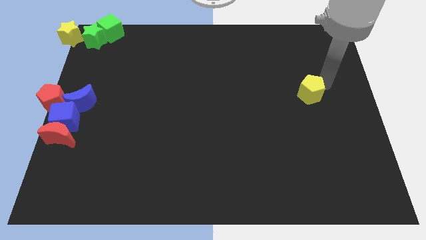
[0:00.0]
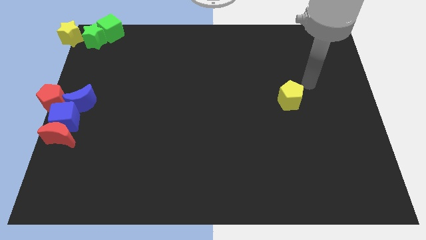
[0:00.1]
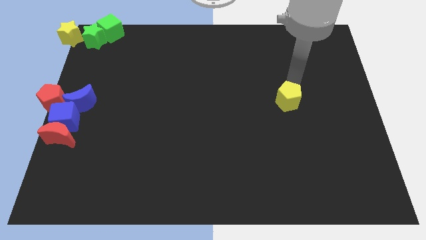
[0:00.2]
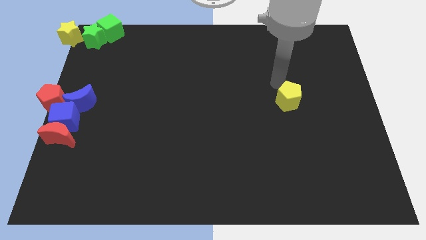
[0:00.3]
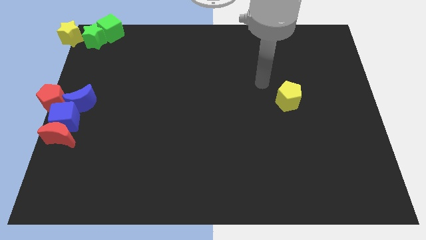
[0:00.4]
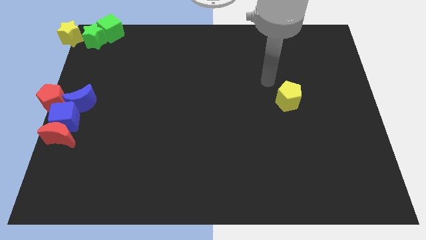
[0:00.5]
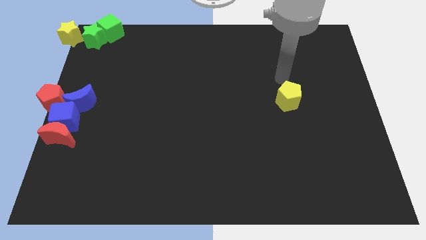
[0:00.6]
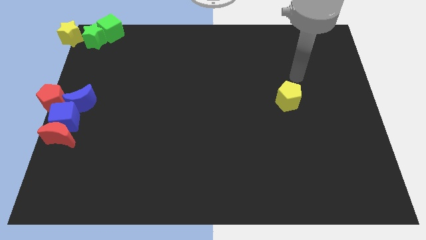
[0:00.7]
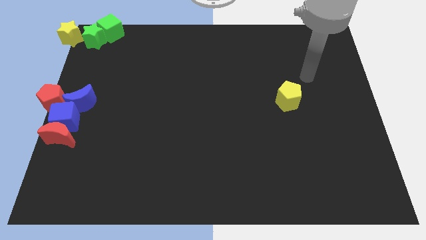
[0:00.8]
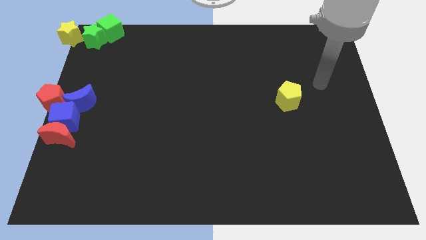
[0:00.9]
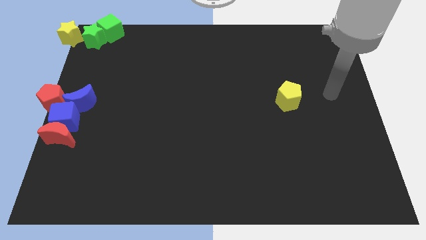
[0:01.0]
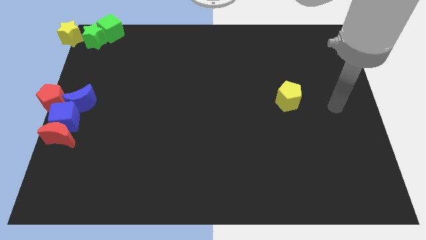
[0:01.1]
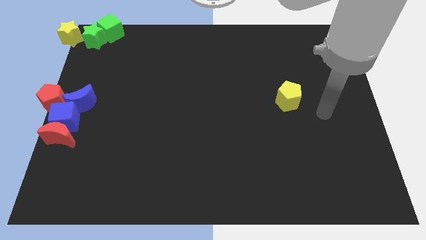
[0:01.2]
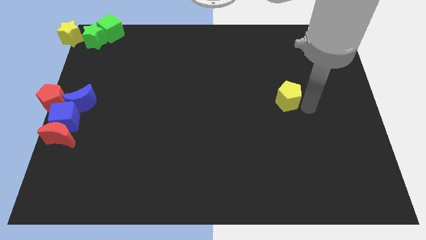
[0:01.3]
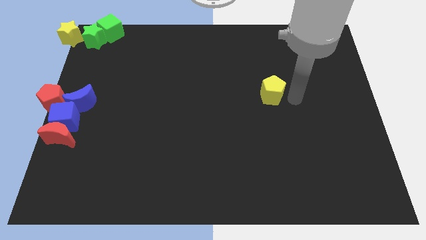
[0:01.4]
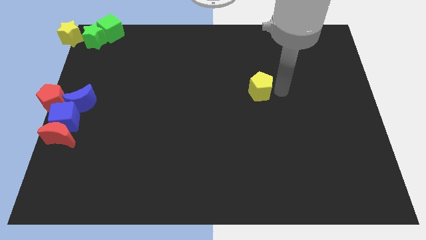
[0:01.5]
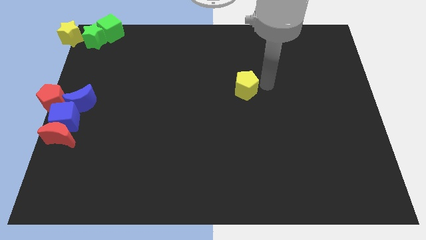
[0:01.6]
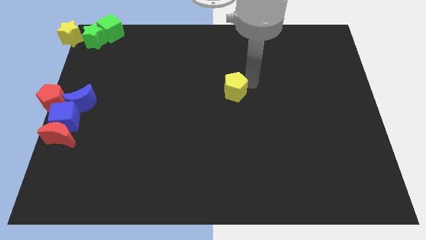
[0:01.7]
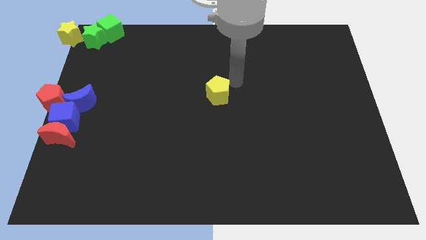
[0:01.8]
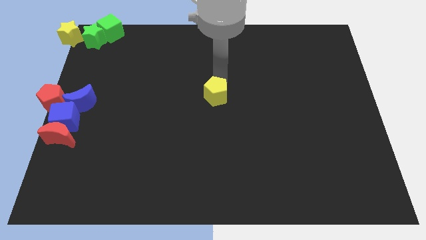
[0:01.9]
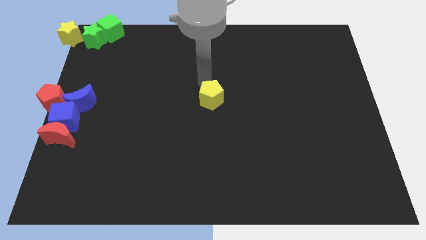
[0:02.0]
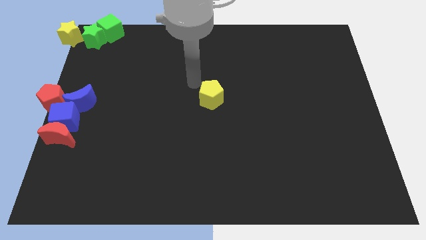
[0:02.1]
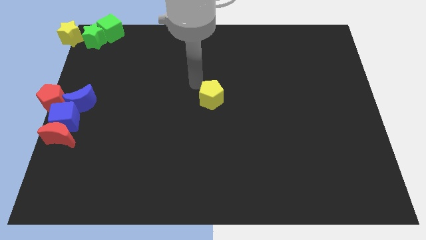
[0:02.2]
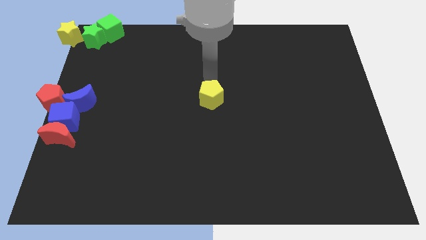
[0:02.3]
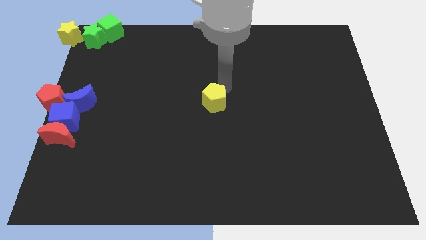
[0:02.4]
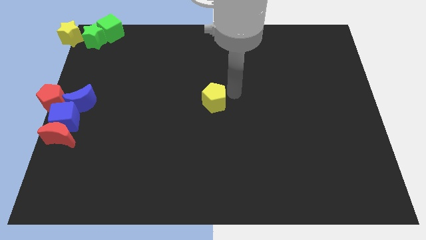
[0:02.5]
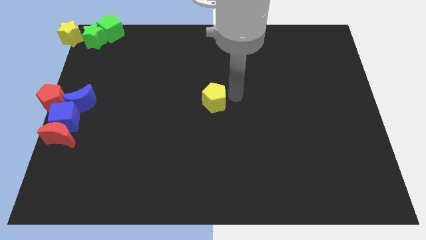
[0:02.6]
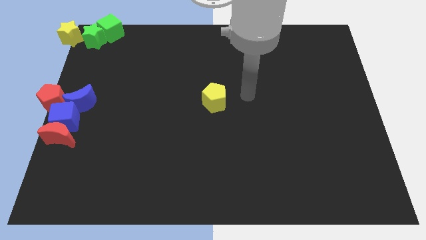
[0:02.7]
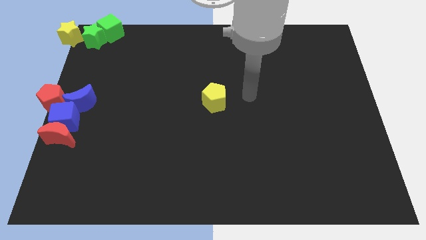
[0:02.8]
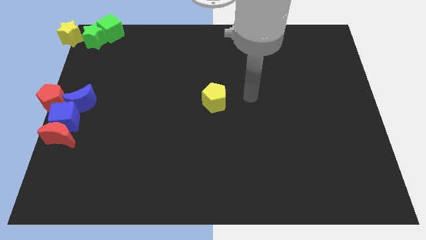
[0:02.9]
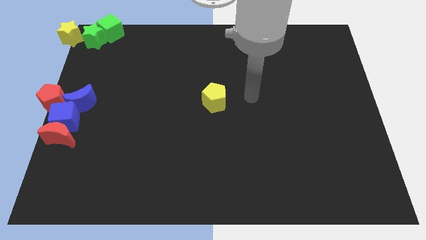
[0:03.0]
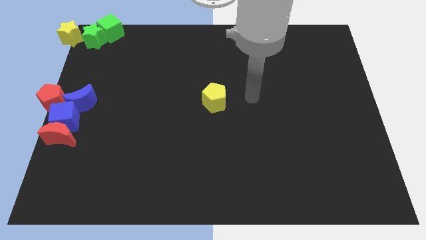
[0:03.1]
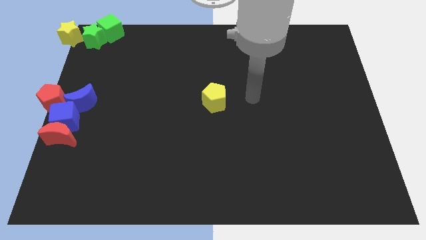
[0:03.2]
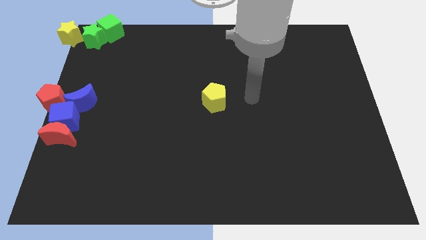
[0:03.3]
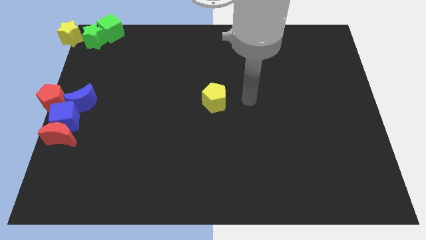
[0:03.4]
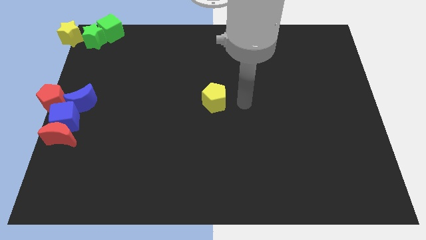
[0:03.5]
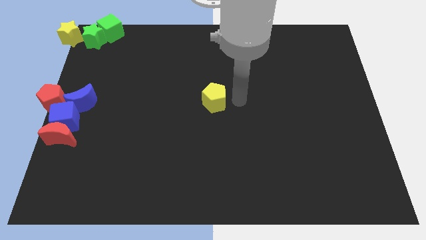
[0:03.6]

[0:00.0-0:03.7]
push the yellow star to the center of the board

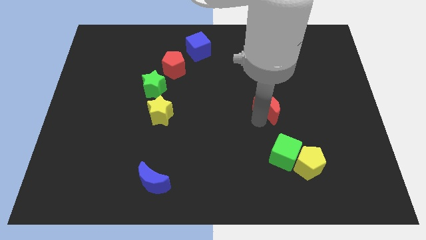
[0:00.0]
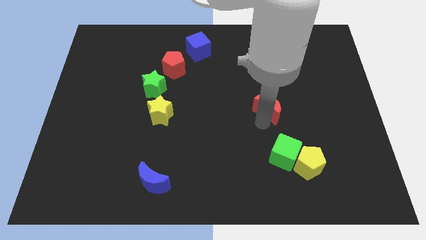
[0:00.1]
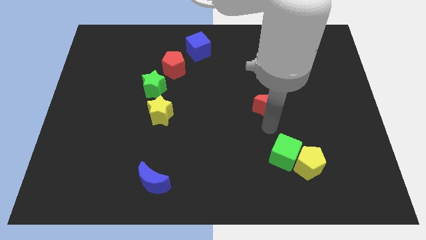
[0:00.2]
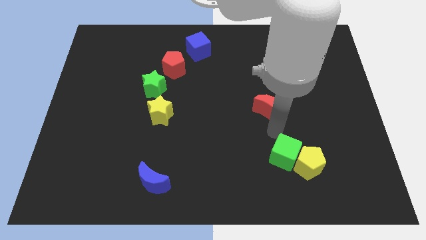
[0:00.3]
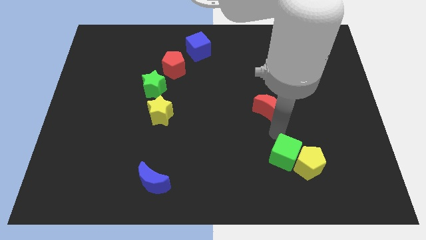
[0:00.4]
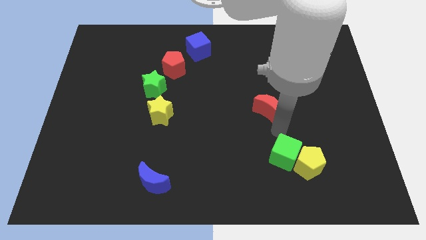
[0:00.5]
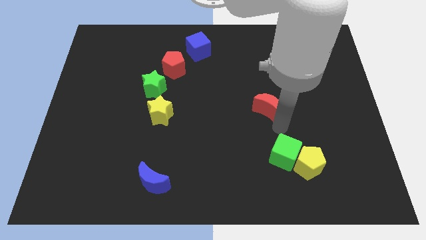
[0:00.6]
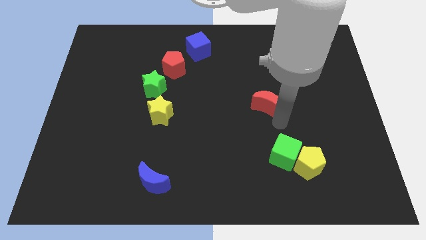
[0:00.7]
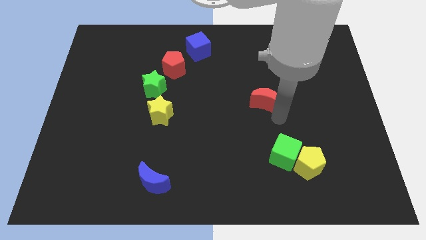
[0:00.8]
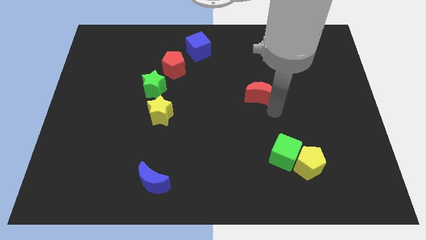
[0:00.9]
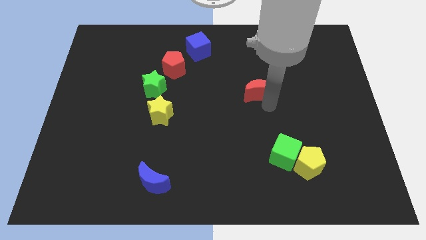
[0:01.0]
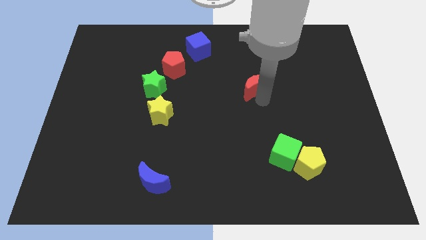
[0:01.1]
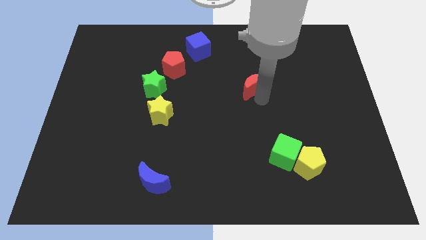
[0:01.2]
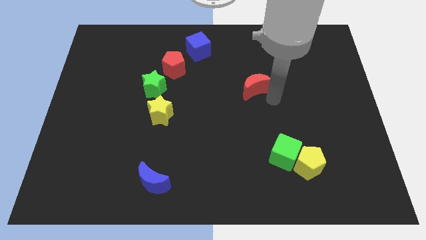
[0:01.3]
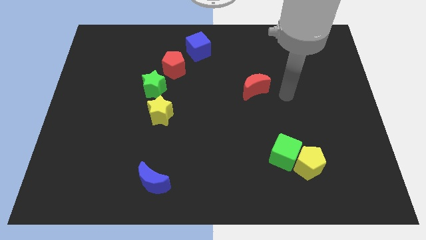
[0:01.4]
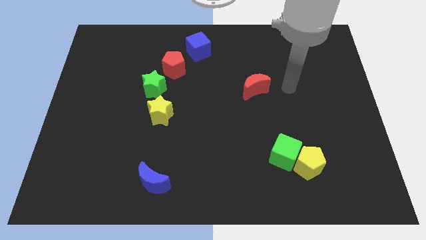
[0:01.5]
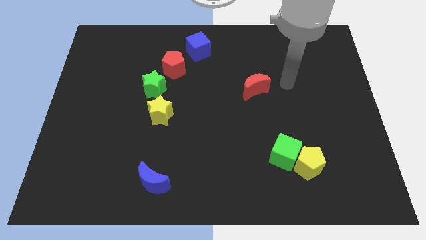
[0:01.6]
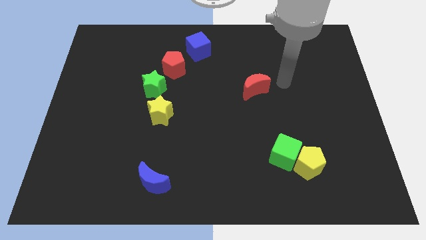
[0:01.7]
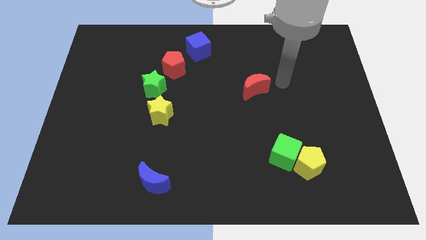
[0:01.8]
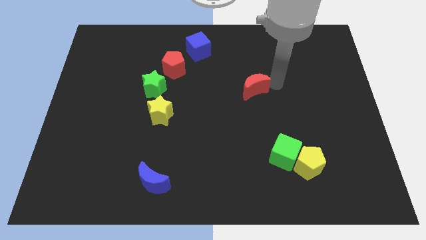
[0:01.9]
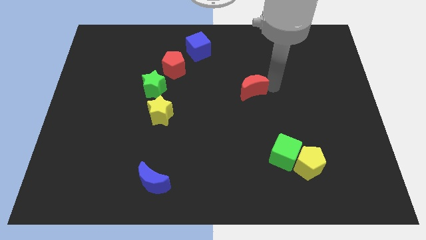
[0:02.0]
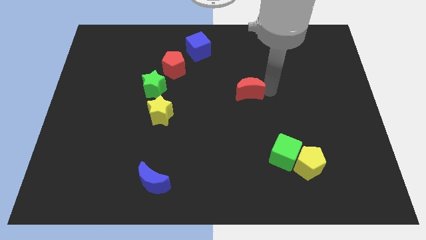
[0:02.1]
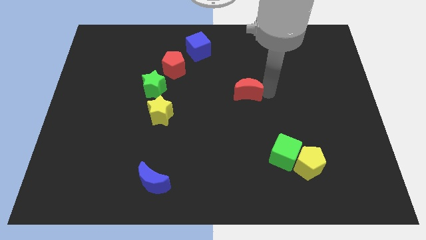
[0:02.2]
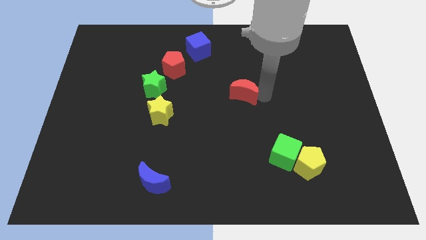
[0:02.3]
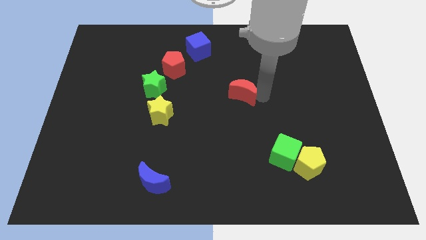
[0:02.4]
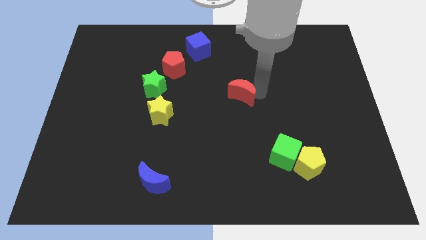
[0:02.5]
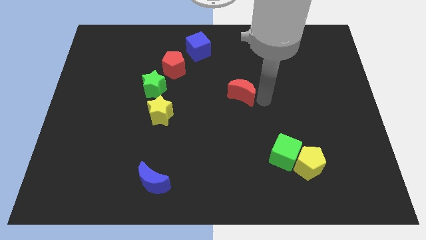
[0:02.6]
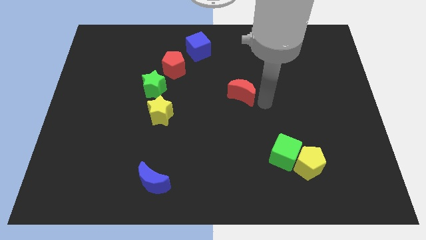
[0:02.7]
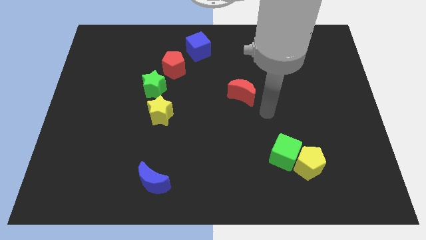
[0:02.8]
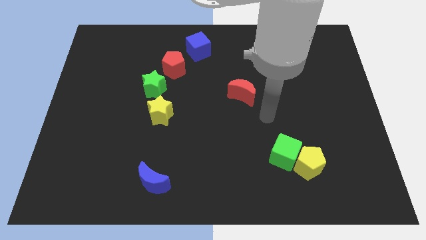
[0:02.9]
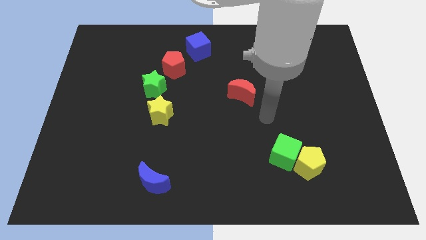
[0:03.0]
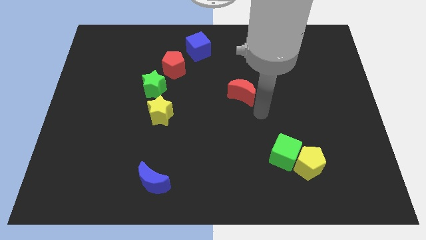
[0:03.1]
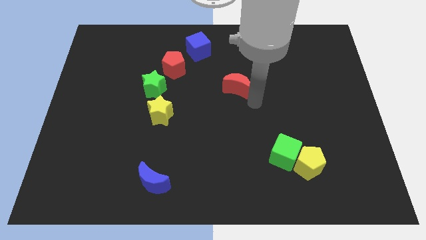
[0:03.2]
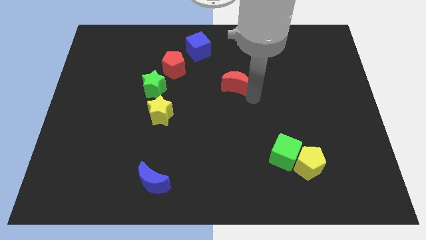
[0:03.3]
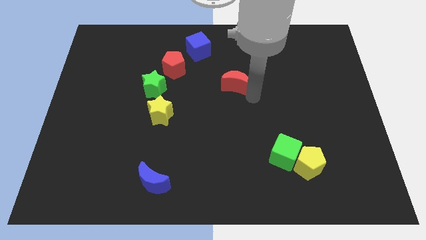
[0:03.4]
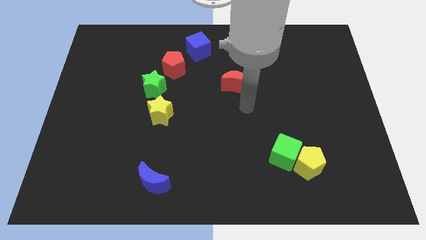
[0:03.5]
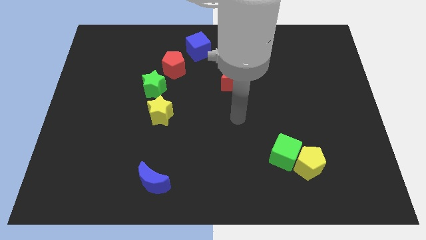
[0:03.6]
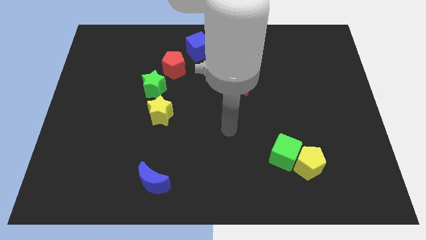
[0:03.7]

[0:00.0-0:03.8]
place the red moon parallel to green star

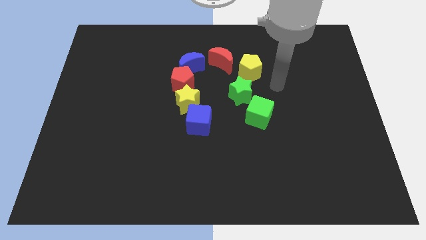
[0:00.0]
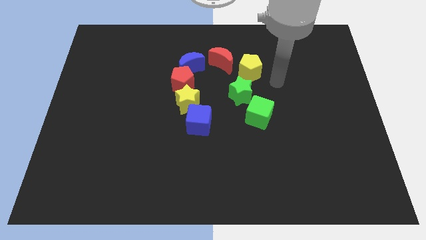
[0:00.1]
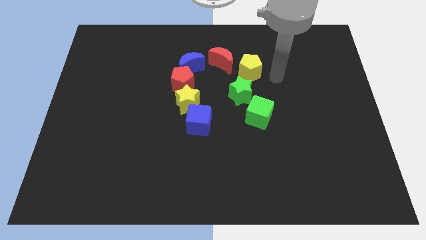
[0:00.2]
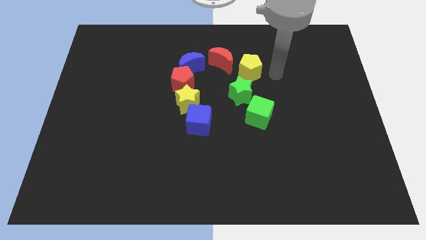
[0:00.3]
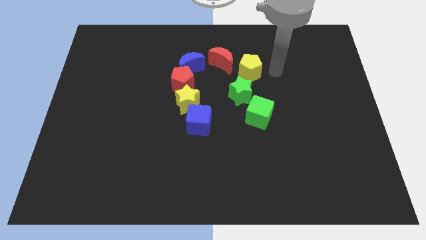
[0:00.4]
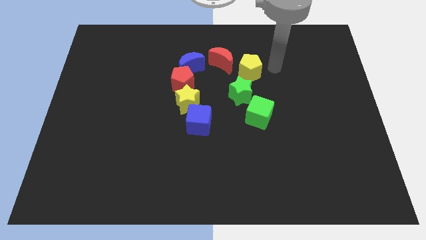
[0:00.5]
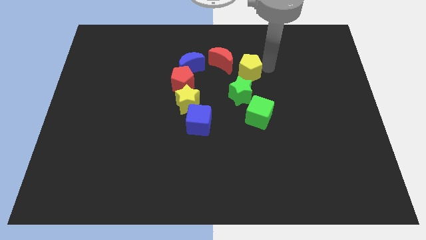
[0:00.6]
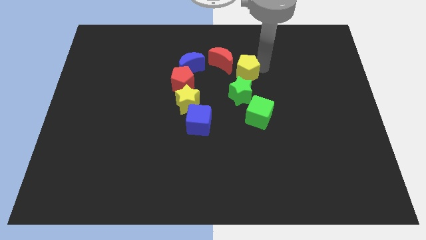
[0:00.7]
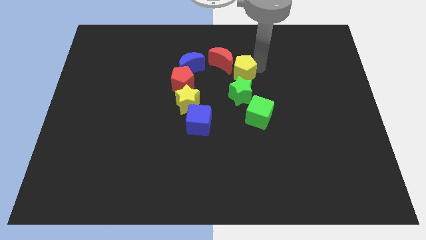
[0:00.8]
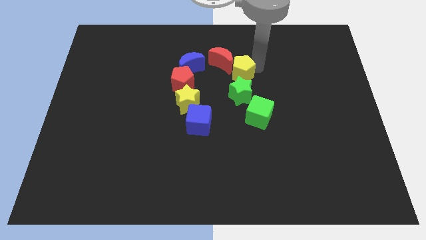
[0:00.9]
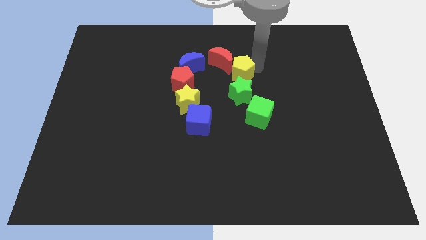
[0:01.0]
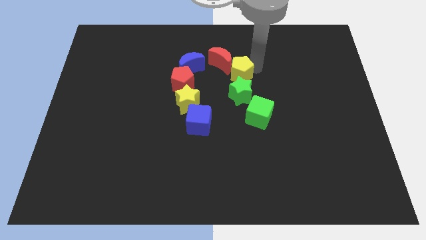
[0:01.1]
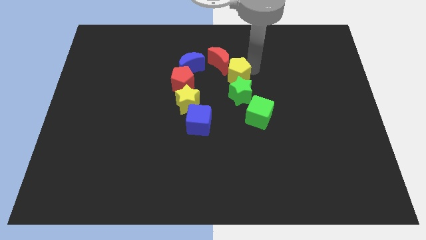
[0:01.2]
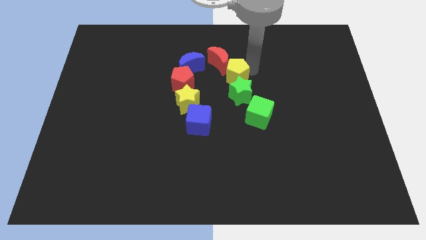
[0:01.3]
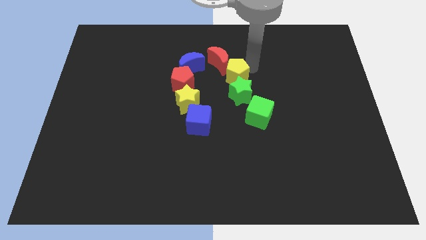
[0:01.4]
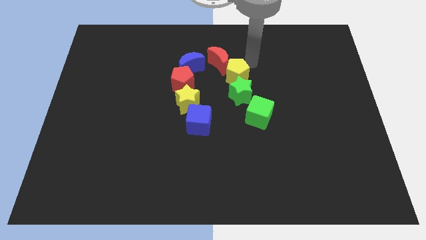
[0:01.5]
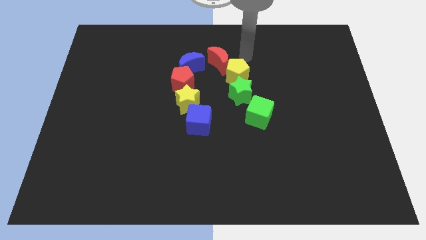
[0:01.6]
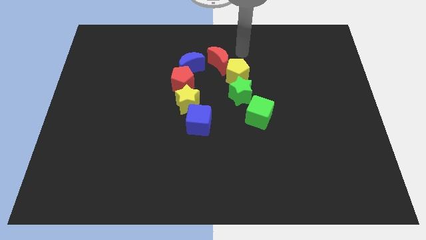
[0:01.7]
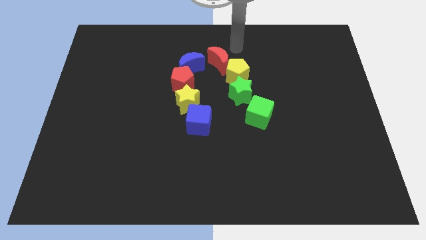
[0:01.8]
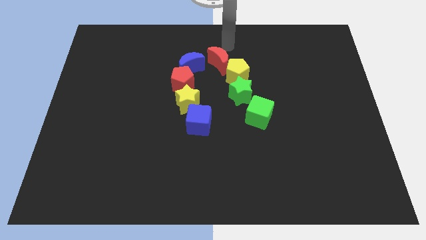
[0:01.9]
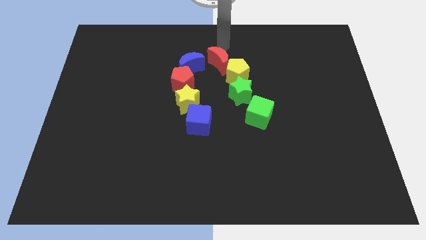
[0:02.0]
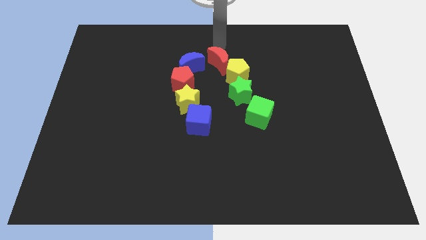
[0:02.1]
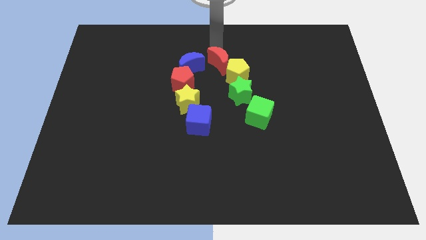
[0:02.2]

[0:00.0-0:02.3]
push the yellow pentagon to the top side of the green star
